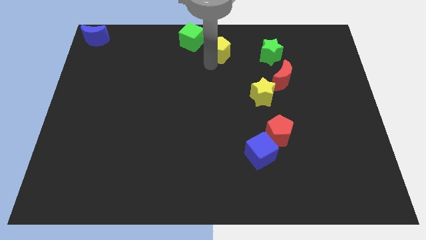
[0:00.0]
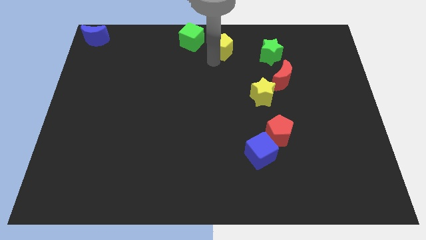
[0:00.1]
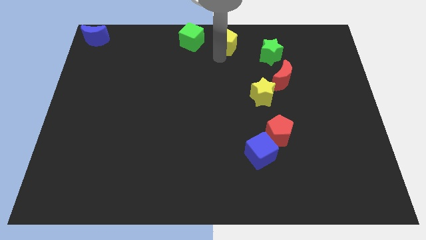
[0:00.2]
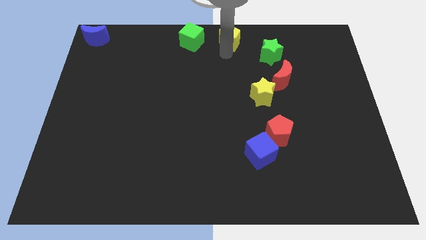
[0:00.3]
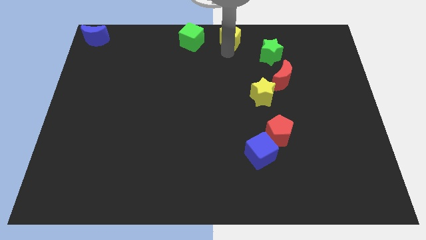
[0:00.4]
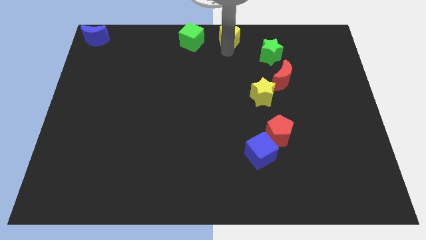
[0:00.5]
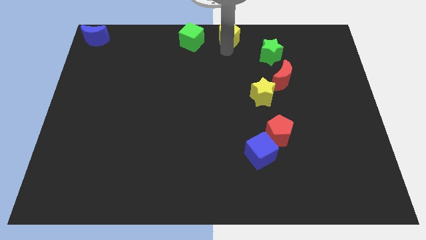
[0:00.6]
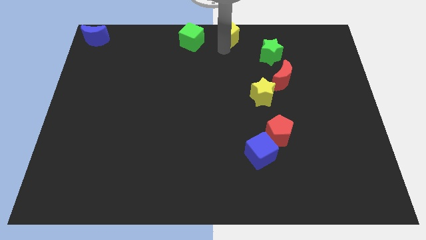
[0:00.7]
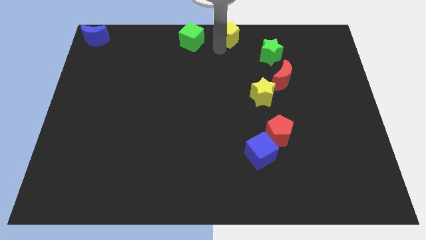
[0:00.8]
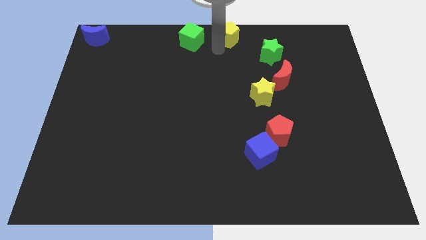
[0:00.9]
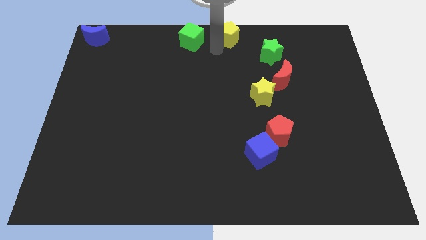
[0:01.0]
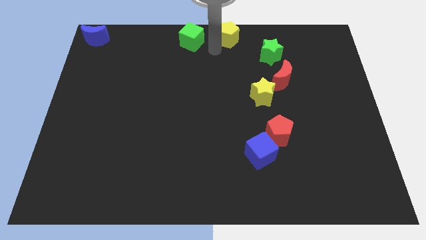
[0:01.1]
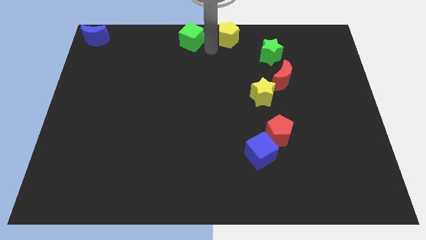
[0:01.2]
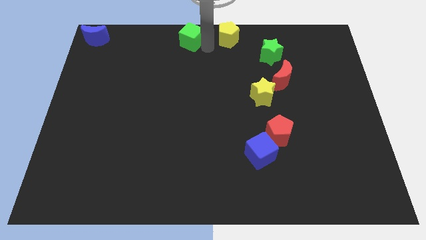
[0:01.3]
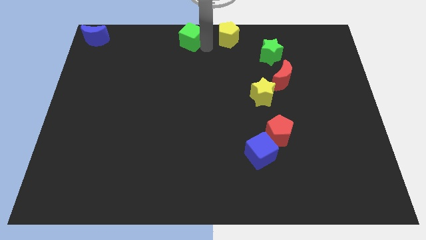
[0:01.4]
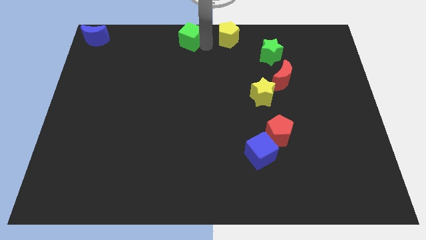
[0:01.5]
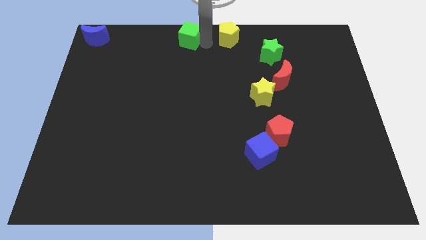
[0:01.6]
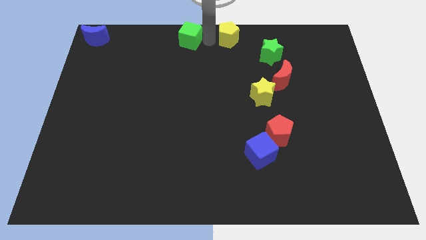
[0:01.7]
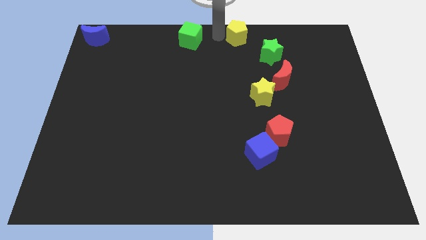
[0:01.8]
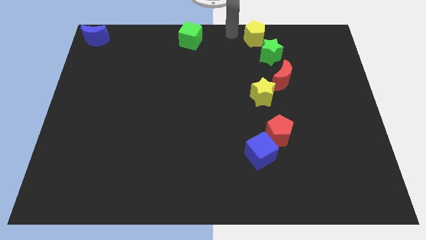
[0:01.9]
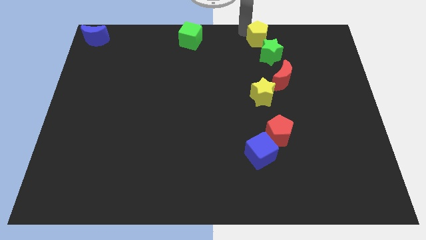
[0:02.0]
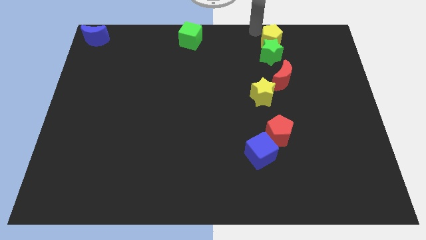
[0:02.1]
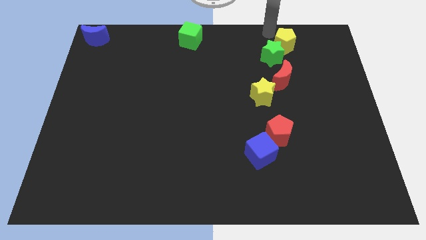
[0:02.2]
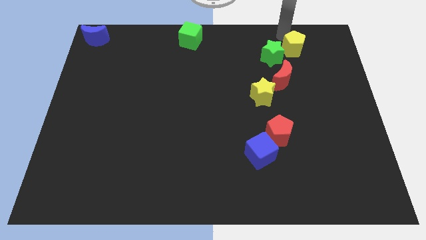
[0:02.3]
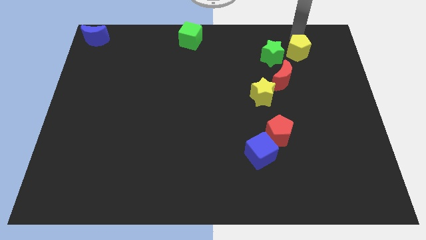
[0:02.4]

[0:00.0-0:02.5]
push the yellow pentagon to the right of the green star

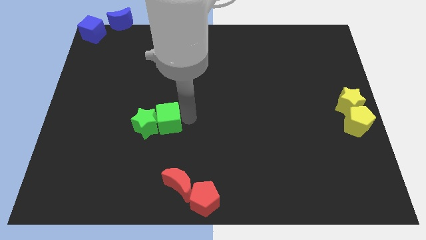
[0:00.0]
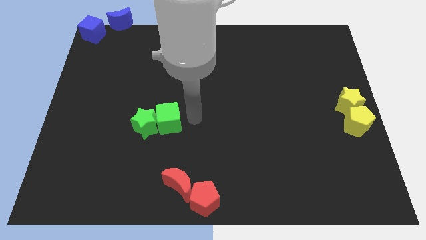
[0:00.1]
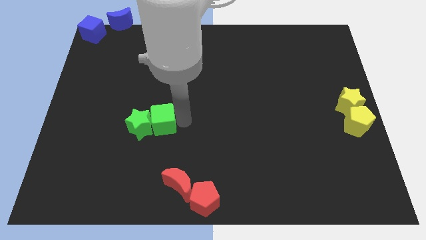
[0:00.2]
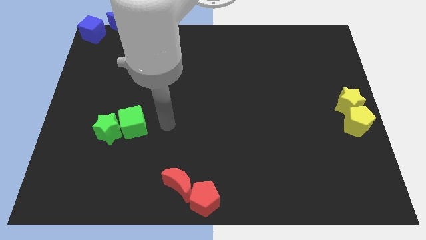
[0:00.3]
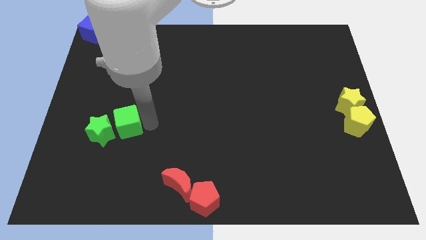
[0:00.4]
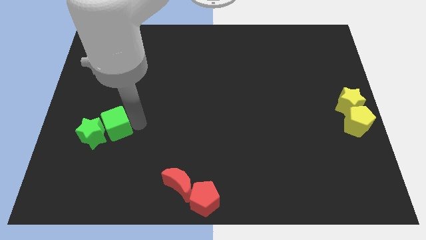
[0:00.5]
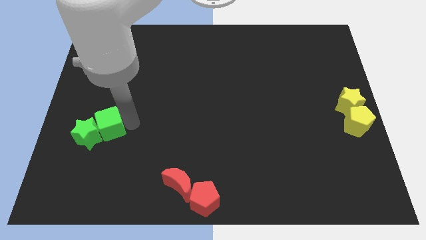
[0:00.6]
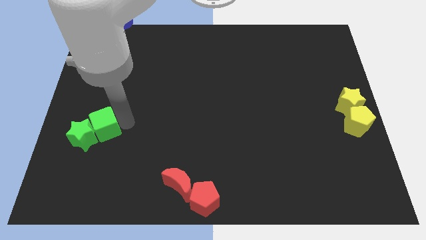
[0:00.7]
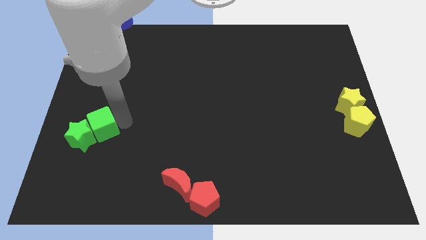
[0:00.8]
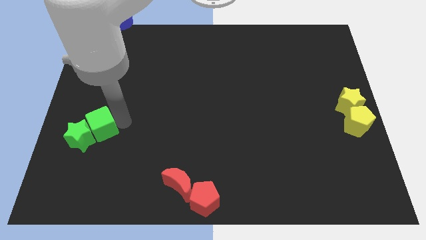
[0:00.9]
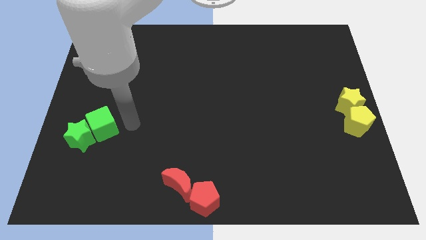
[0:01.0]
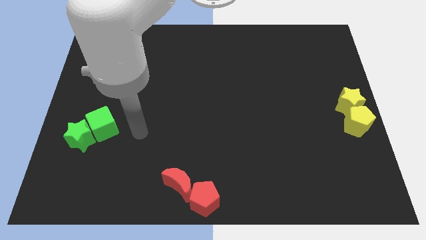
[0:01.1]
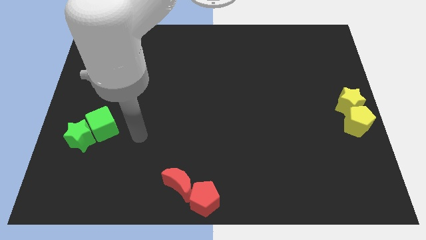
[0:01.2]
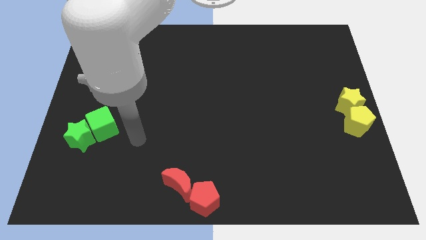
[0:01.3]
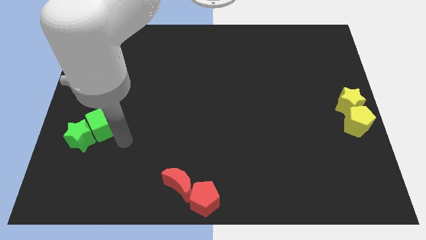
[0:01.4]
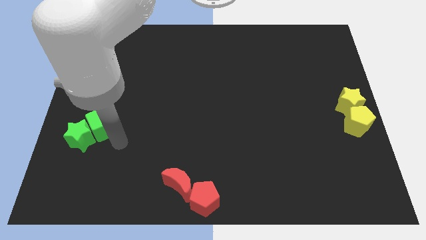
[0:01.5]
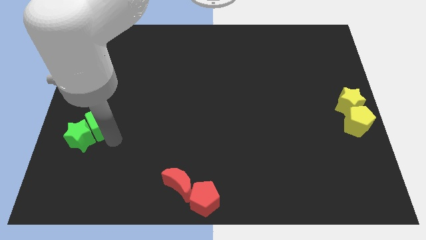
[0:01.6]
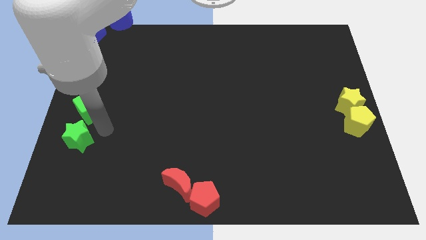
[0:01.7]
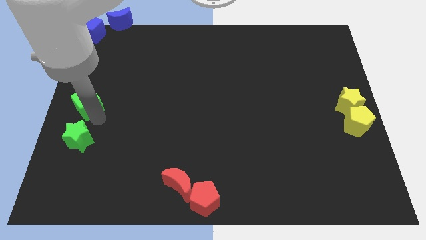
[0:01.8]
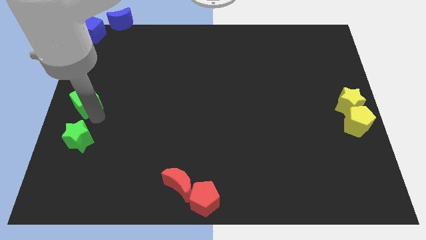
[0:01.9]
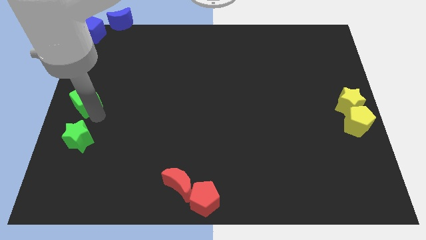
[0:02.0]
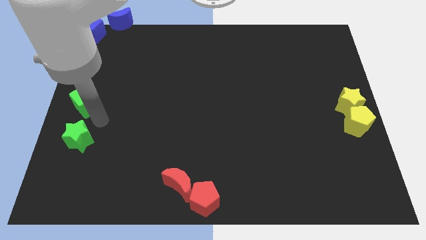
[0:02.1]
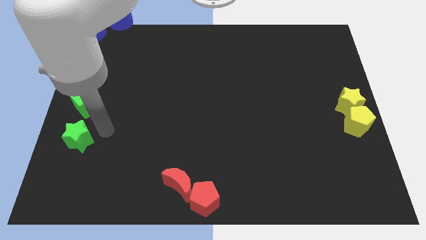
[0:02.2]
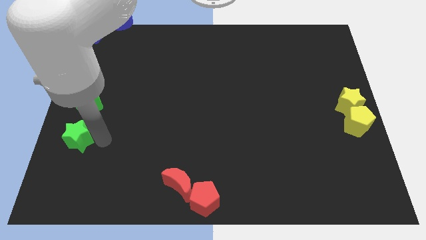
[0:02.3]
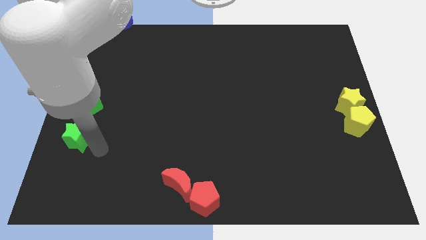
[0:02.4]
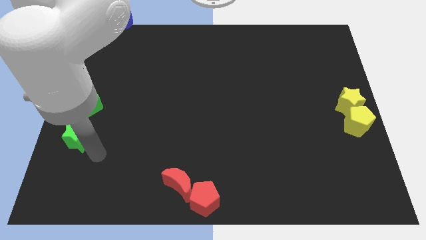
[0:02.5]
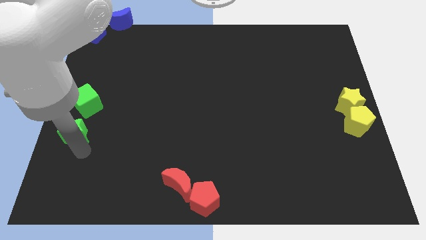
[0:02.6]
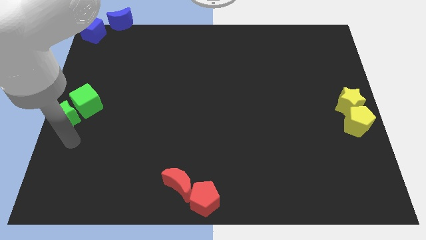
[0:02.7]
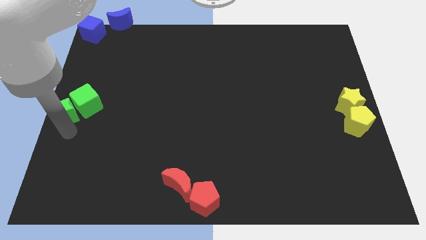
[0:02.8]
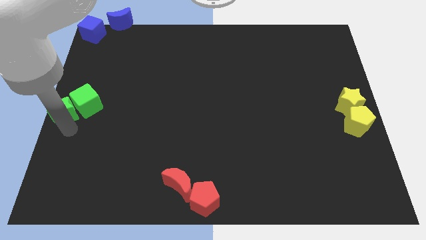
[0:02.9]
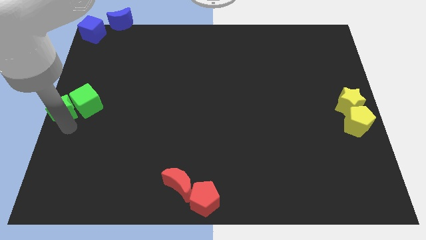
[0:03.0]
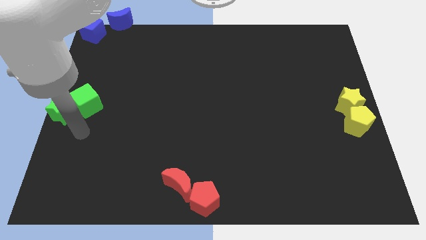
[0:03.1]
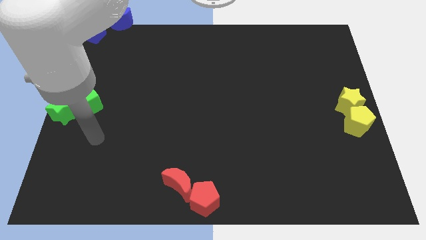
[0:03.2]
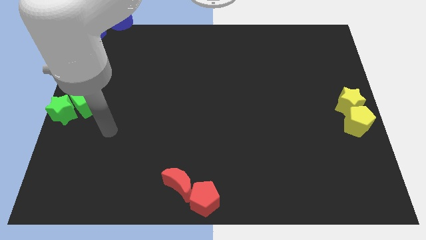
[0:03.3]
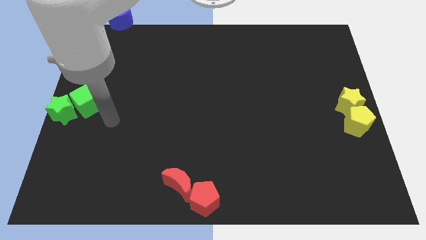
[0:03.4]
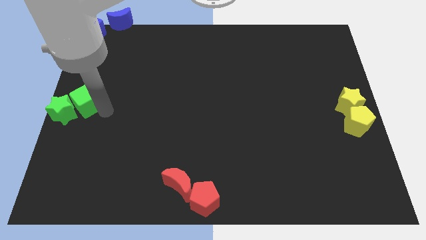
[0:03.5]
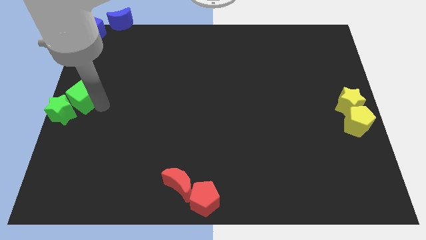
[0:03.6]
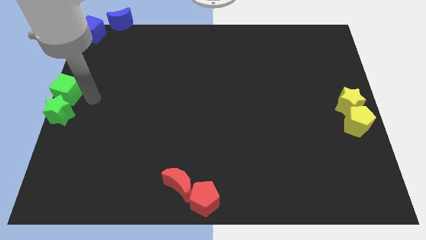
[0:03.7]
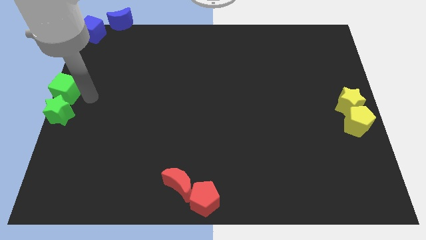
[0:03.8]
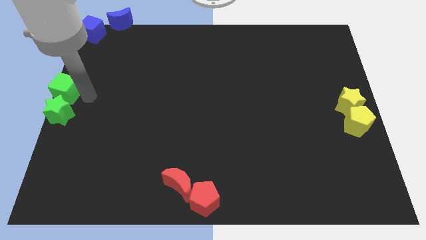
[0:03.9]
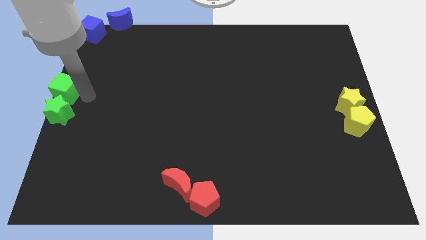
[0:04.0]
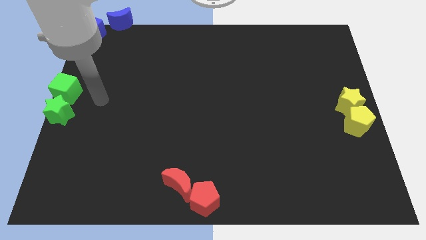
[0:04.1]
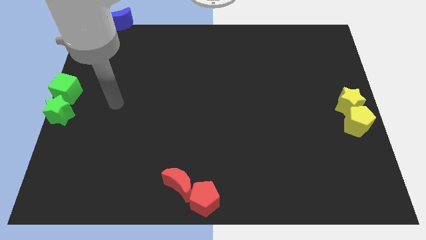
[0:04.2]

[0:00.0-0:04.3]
place the green cube to the top of green star

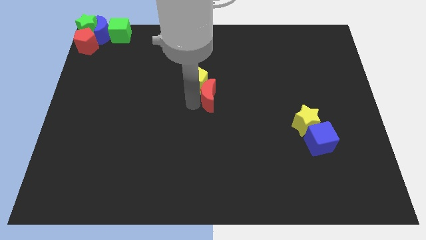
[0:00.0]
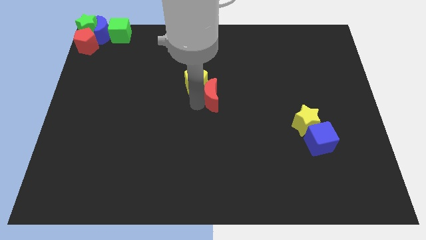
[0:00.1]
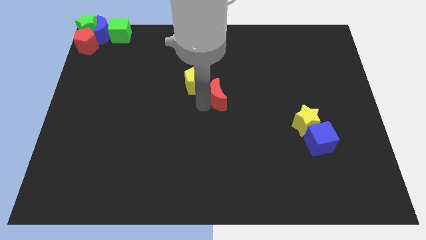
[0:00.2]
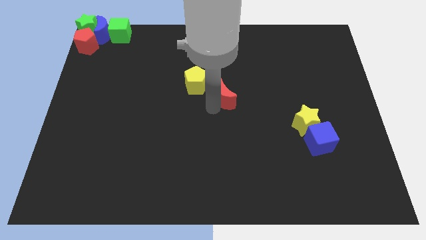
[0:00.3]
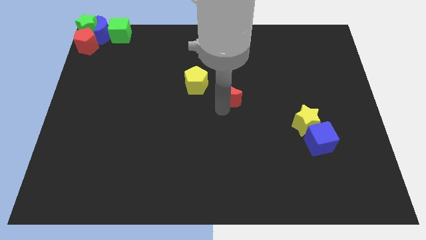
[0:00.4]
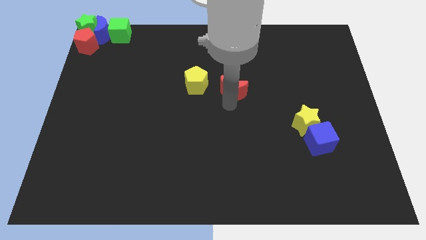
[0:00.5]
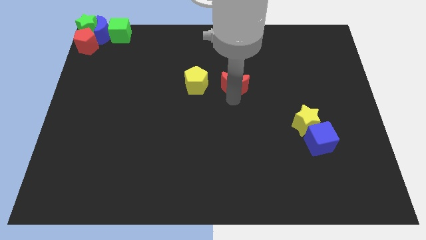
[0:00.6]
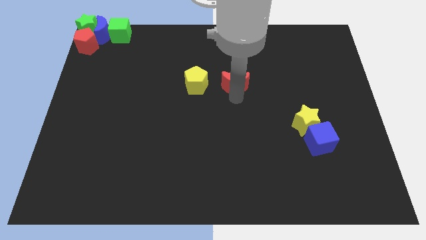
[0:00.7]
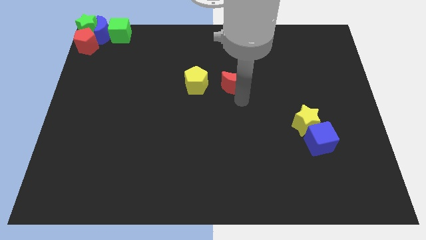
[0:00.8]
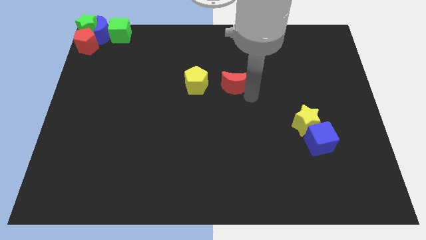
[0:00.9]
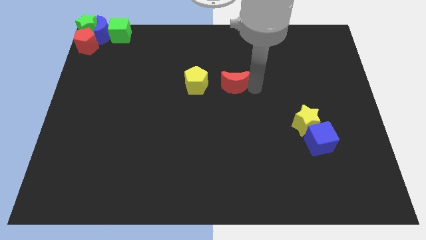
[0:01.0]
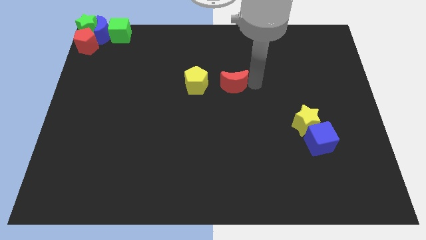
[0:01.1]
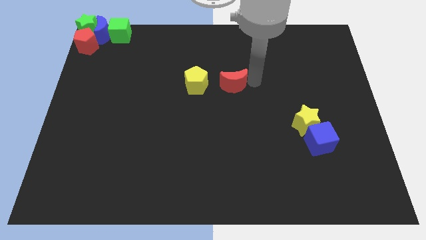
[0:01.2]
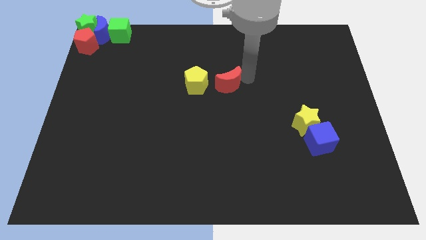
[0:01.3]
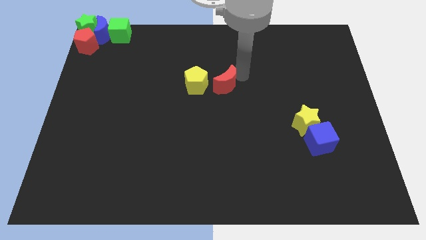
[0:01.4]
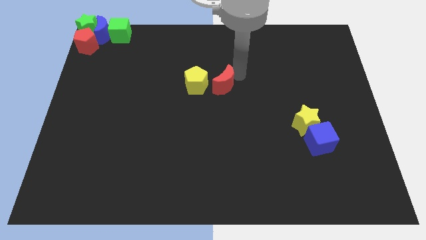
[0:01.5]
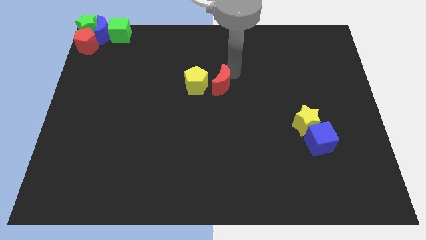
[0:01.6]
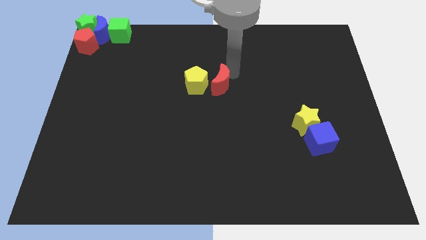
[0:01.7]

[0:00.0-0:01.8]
move the red crescent to the right of the yellow pentagon

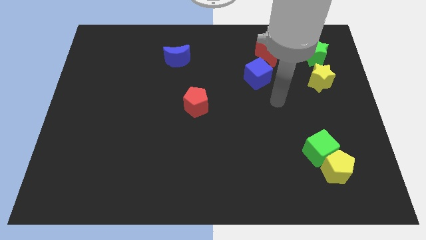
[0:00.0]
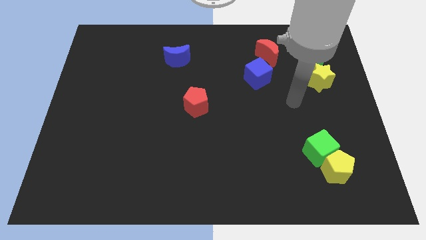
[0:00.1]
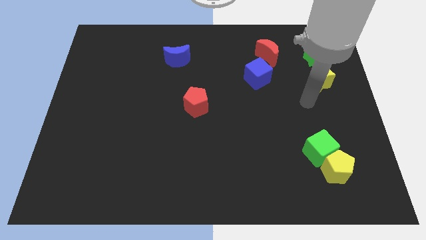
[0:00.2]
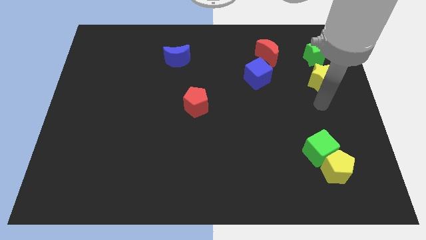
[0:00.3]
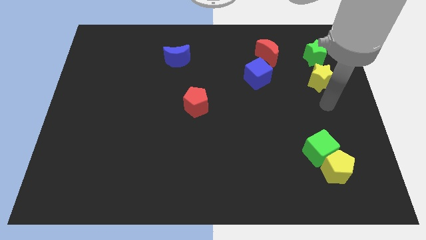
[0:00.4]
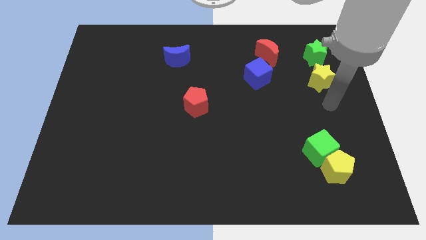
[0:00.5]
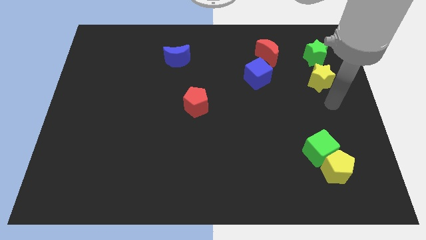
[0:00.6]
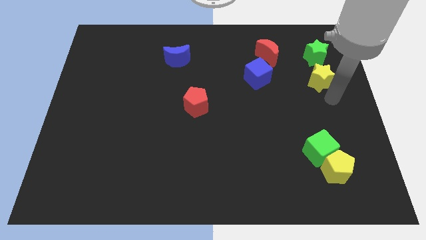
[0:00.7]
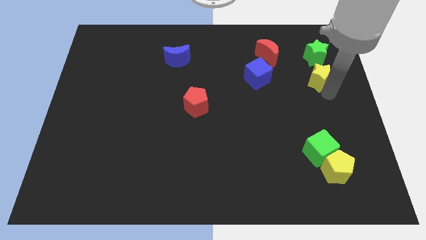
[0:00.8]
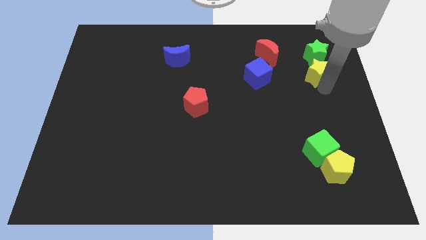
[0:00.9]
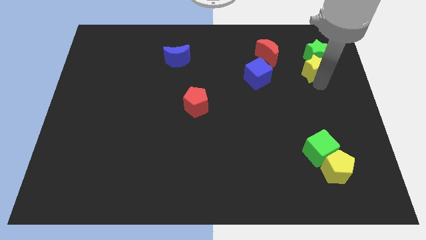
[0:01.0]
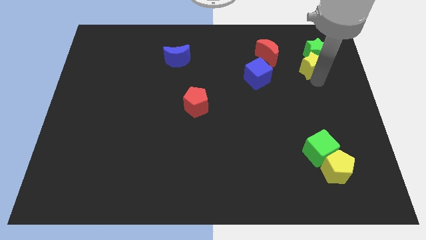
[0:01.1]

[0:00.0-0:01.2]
push the yellow star into the green star
